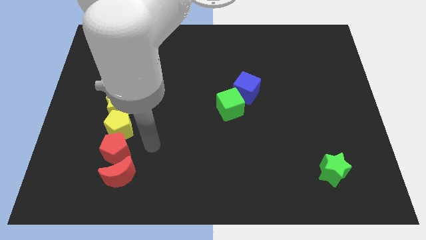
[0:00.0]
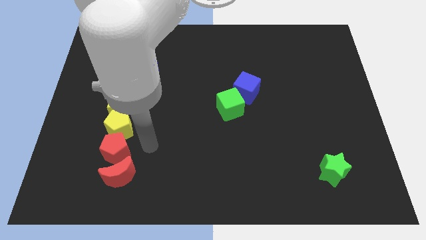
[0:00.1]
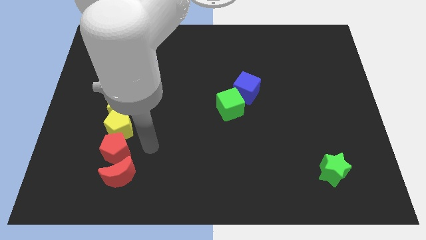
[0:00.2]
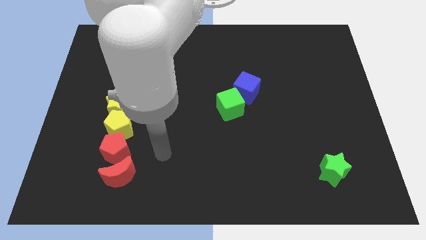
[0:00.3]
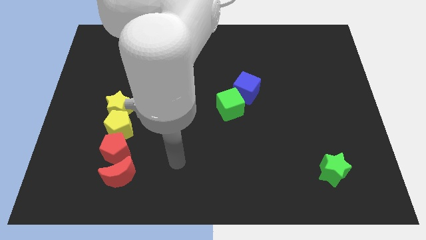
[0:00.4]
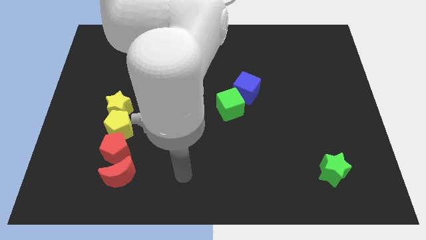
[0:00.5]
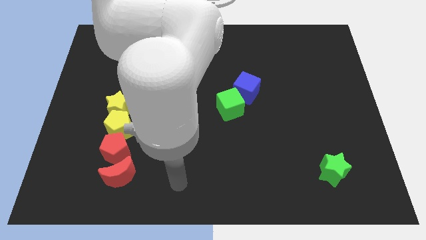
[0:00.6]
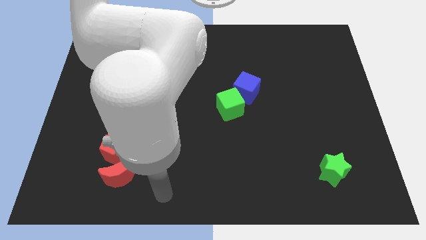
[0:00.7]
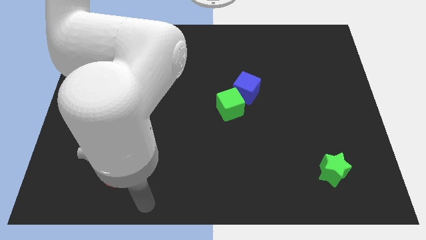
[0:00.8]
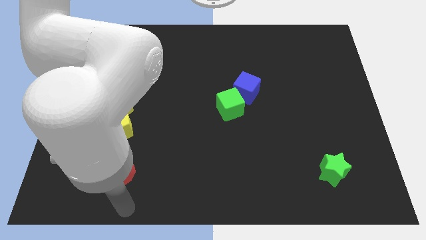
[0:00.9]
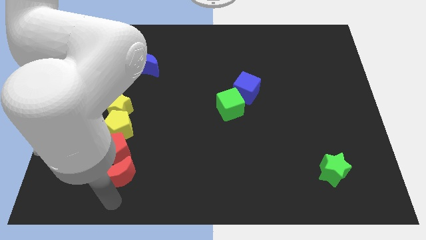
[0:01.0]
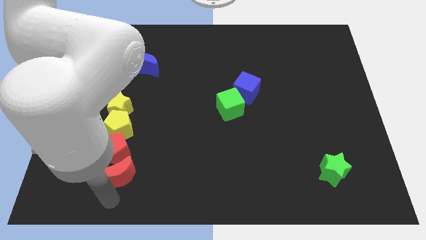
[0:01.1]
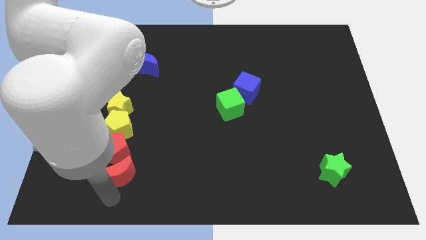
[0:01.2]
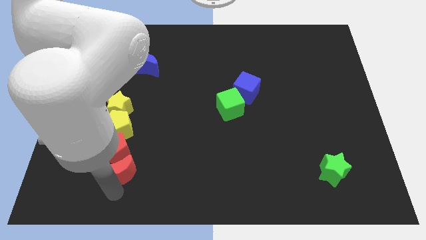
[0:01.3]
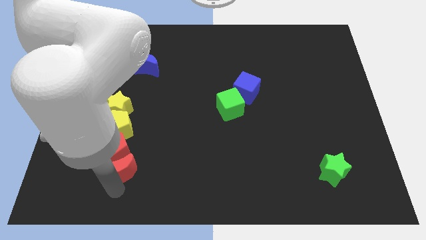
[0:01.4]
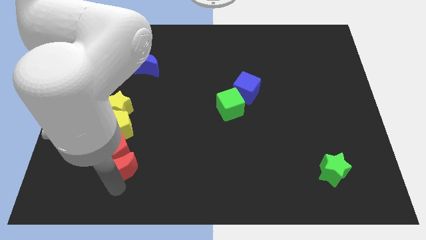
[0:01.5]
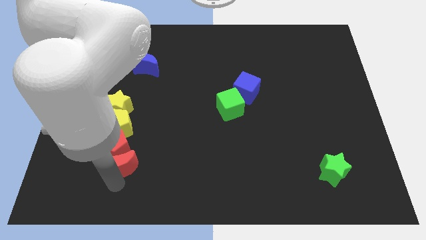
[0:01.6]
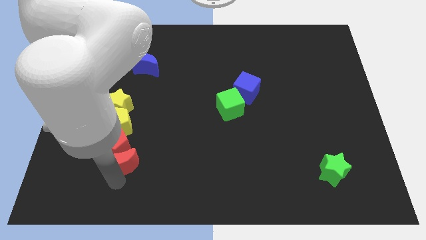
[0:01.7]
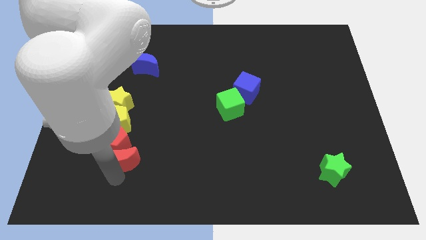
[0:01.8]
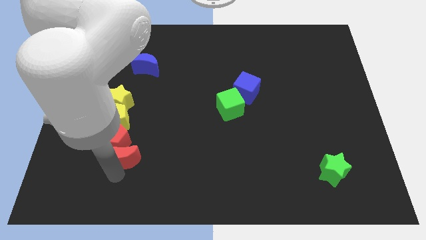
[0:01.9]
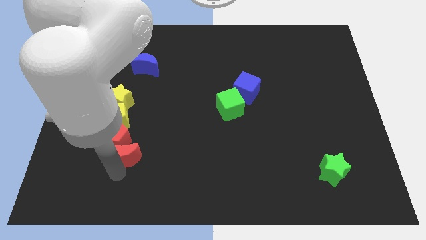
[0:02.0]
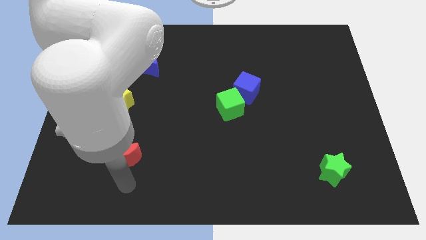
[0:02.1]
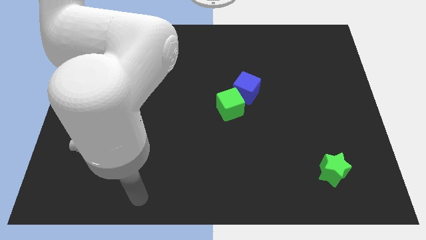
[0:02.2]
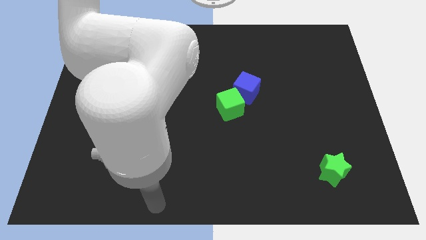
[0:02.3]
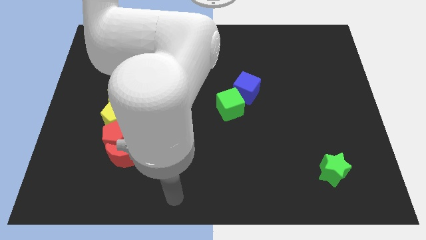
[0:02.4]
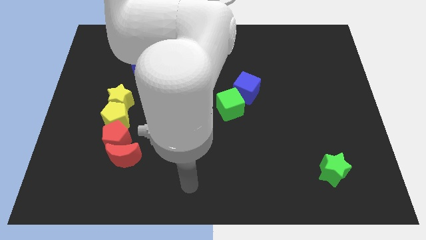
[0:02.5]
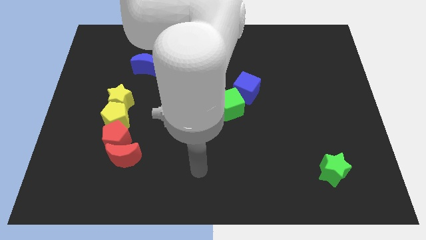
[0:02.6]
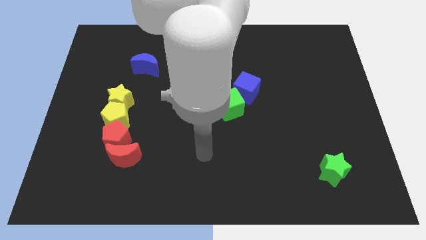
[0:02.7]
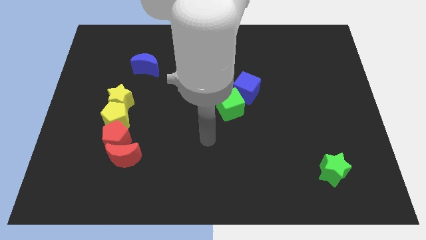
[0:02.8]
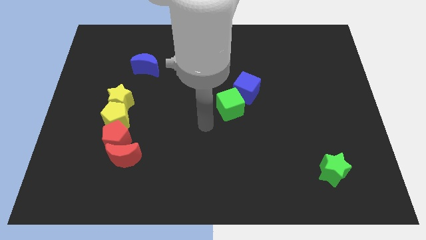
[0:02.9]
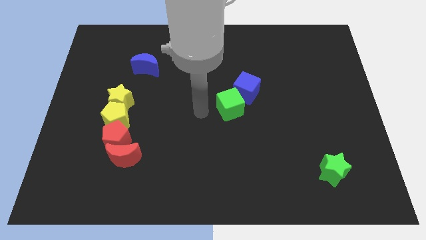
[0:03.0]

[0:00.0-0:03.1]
push the red and yellow blocks towards the top side of the board

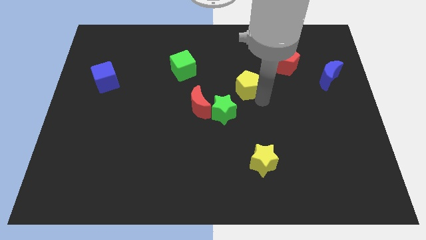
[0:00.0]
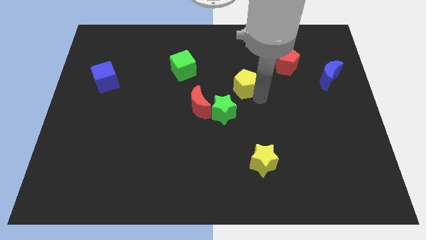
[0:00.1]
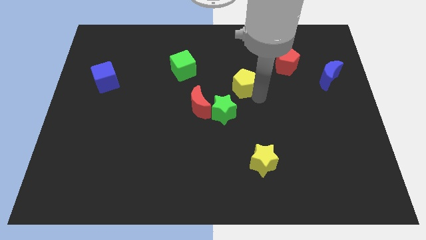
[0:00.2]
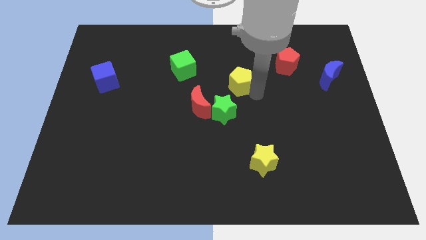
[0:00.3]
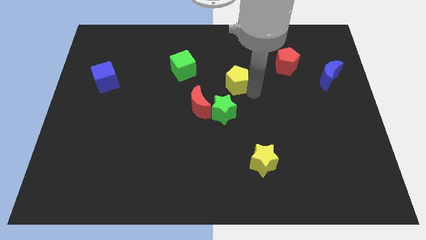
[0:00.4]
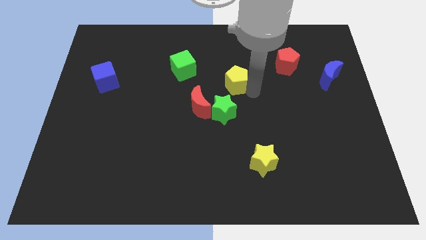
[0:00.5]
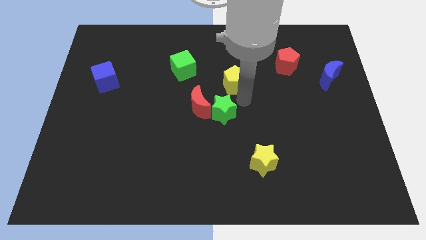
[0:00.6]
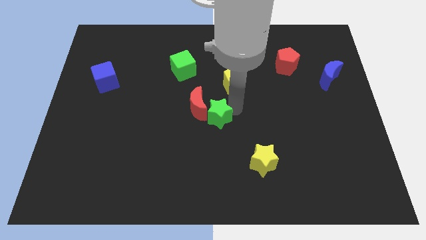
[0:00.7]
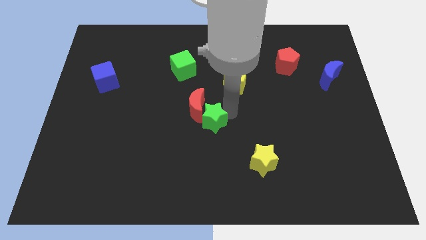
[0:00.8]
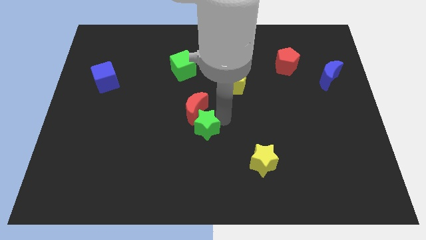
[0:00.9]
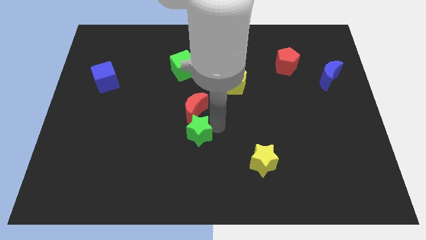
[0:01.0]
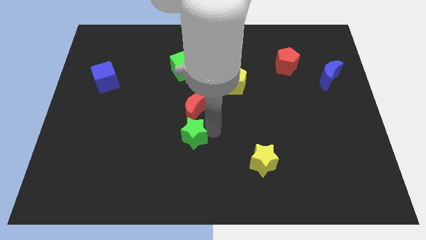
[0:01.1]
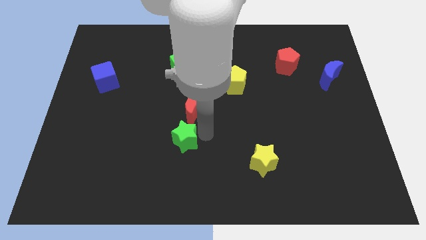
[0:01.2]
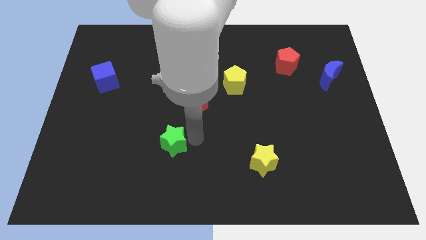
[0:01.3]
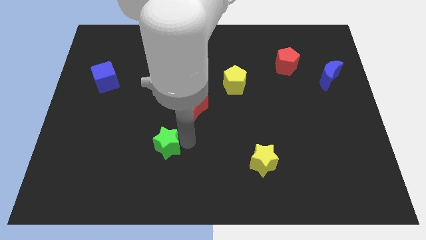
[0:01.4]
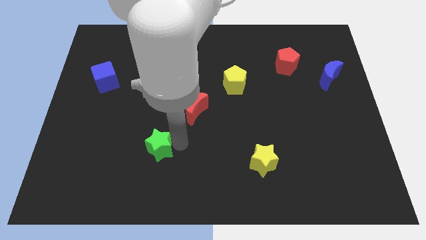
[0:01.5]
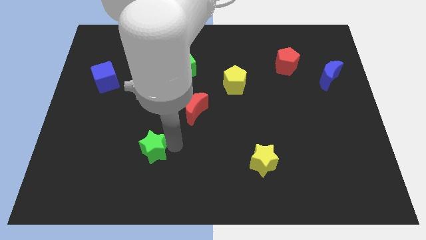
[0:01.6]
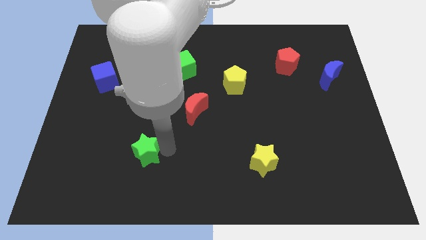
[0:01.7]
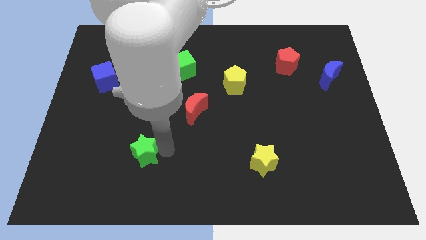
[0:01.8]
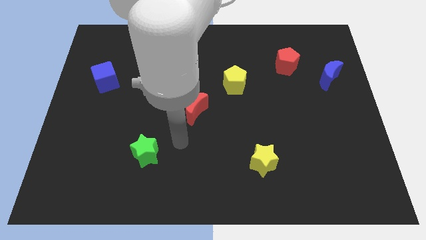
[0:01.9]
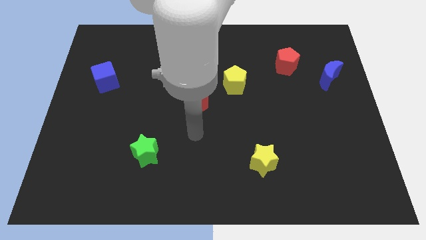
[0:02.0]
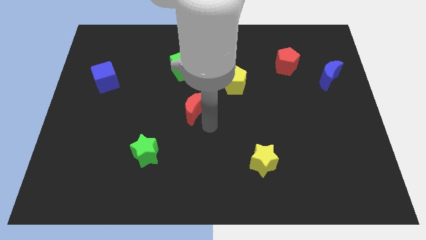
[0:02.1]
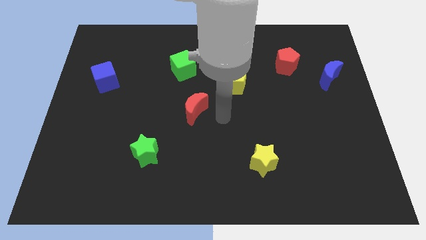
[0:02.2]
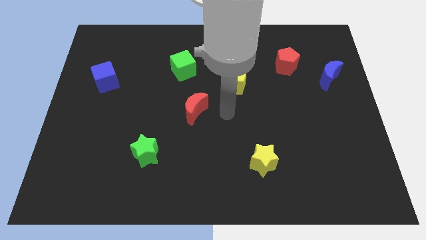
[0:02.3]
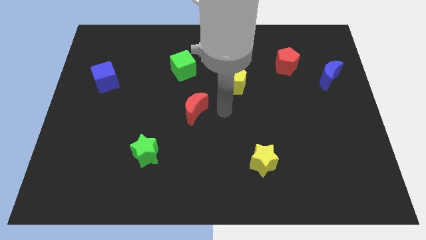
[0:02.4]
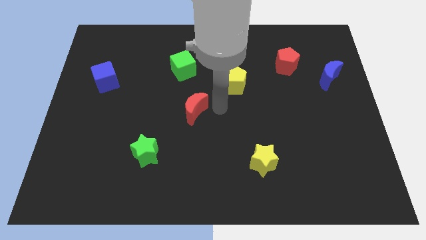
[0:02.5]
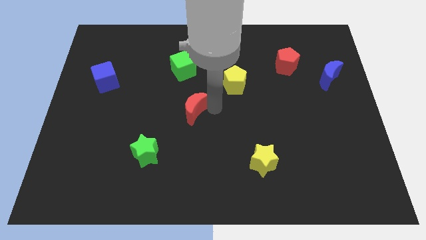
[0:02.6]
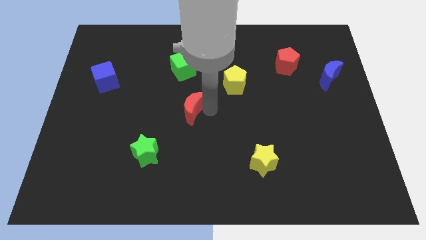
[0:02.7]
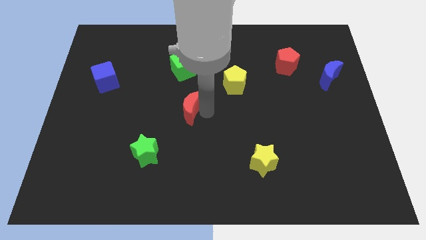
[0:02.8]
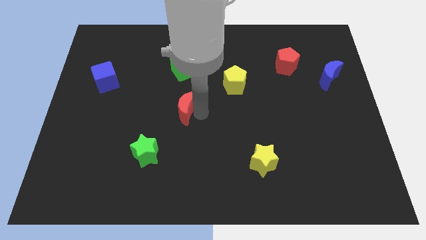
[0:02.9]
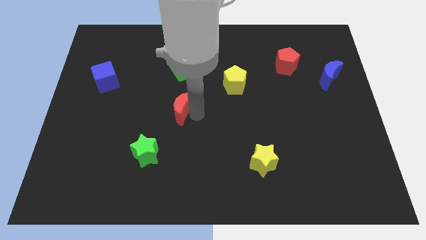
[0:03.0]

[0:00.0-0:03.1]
push the green star towards the bottom

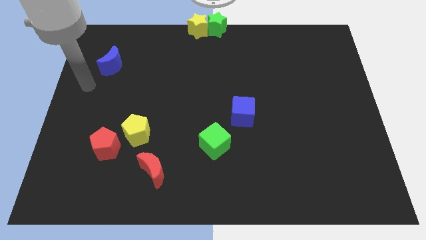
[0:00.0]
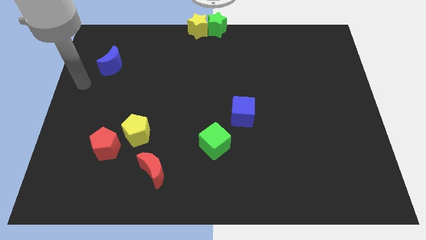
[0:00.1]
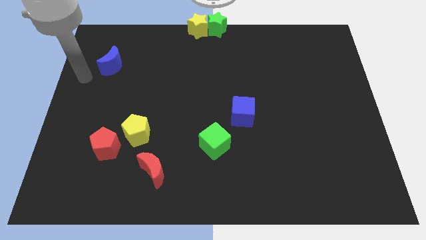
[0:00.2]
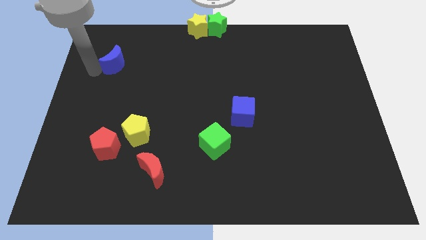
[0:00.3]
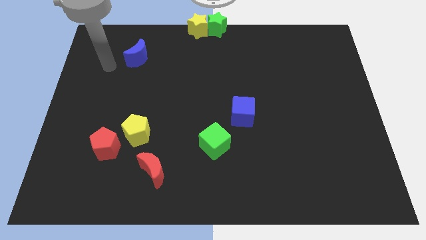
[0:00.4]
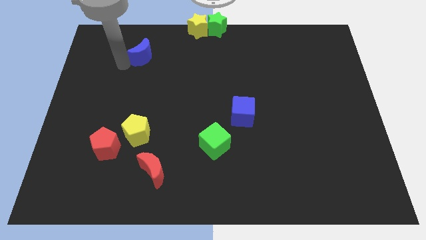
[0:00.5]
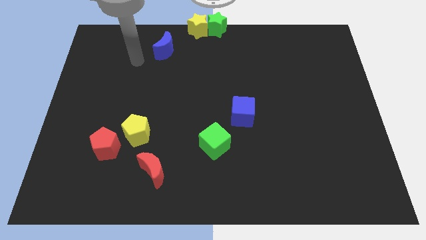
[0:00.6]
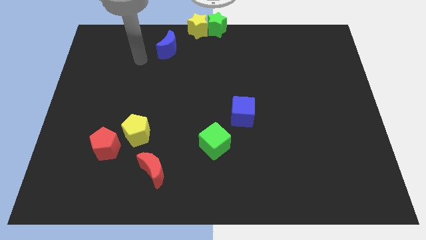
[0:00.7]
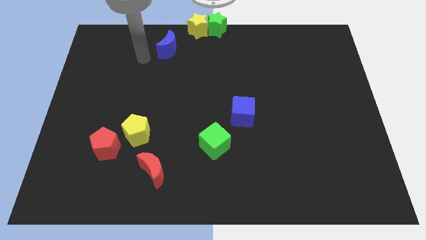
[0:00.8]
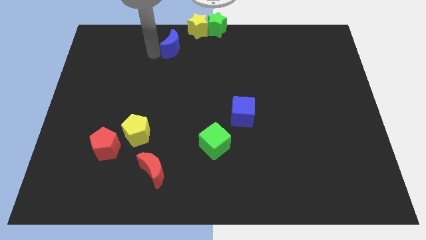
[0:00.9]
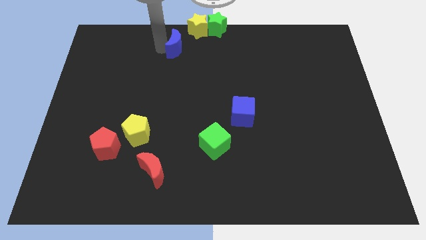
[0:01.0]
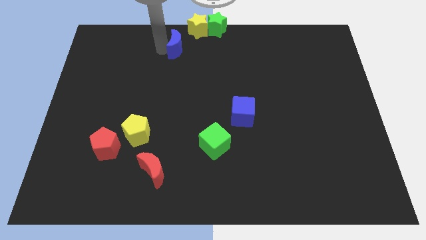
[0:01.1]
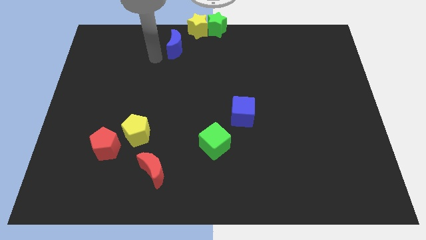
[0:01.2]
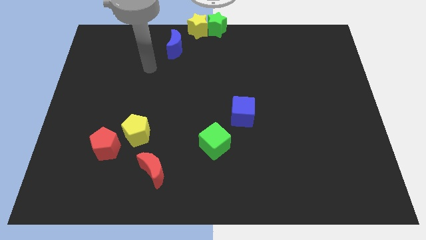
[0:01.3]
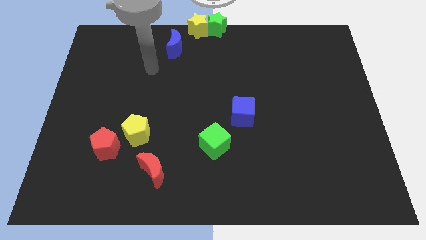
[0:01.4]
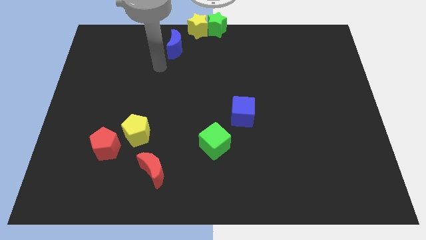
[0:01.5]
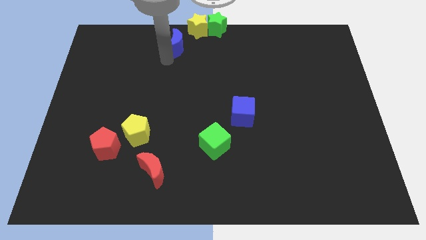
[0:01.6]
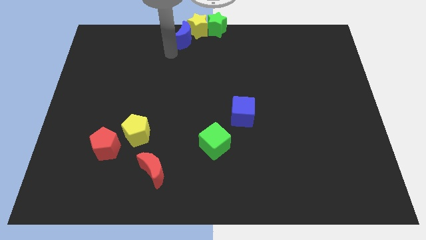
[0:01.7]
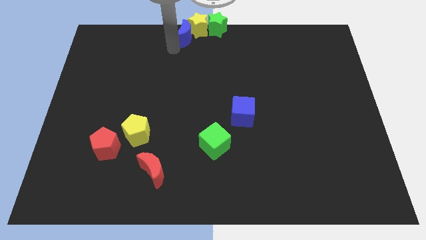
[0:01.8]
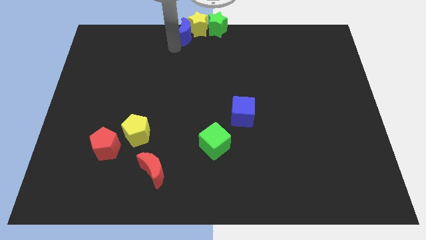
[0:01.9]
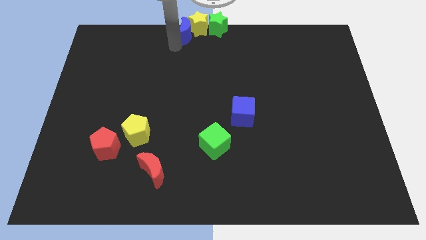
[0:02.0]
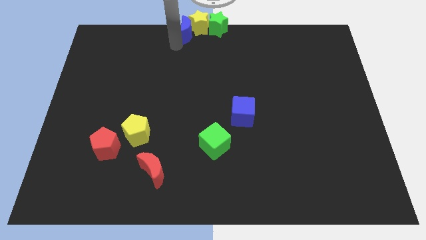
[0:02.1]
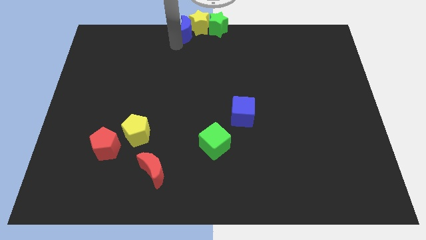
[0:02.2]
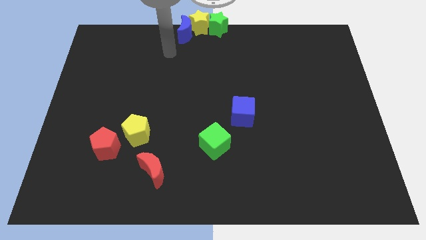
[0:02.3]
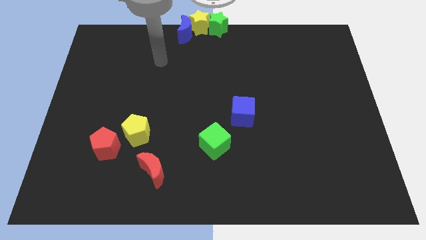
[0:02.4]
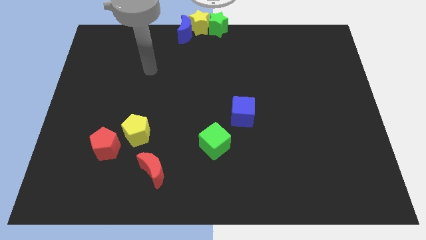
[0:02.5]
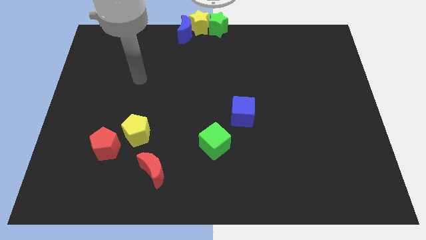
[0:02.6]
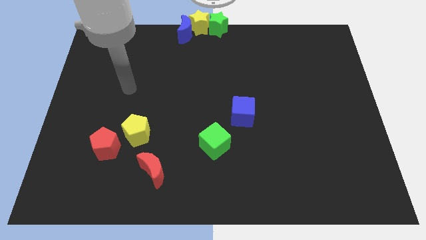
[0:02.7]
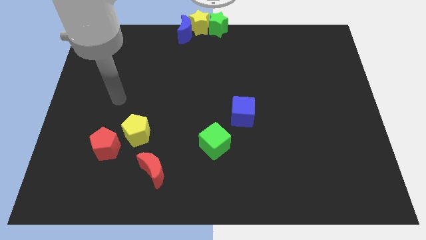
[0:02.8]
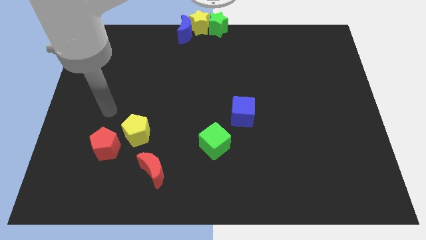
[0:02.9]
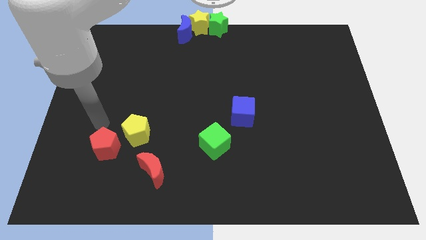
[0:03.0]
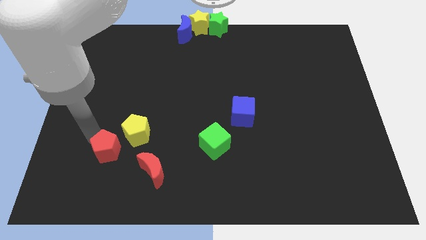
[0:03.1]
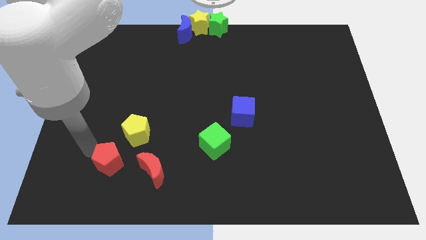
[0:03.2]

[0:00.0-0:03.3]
push the blue crescent to the left of the yellow star
